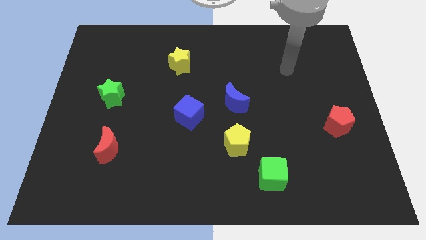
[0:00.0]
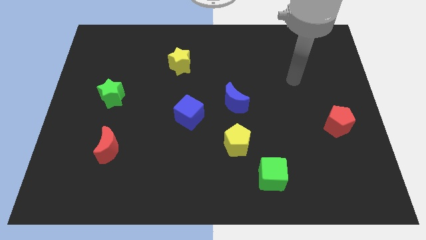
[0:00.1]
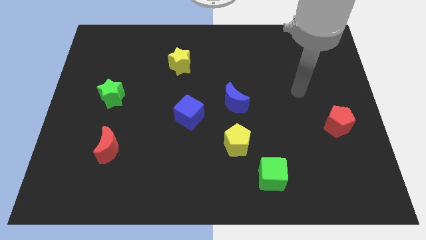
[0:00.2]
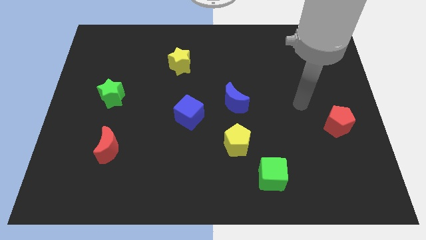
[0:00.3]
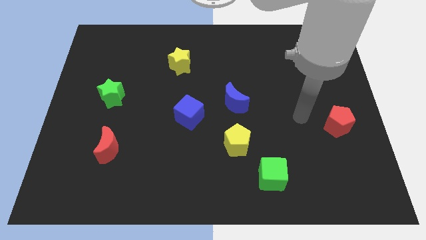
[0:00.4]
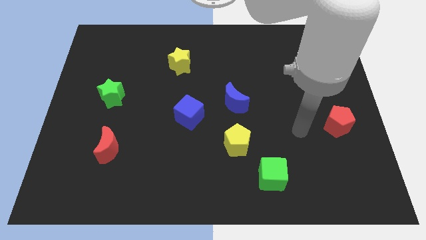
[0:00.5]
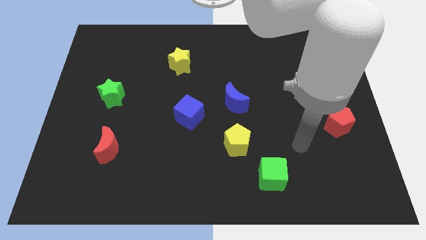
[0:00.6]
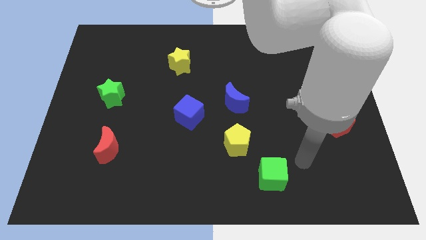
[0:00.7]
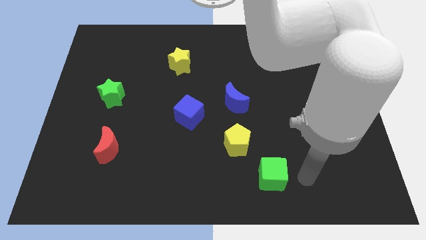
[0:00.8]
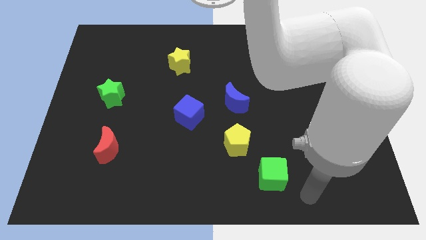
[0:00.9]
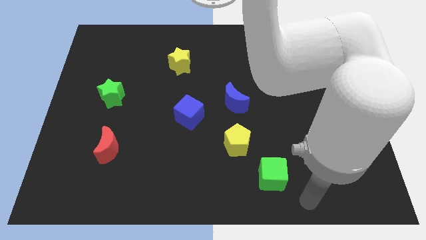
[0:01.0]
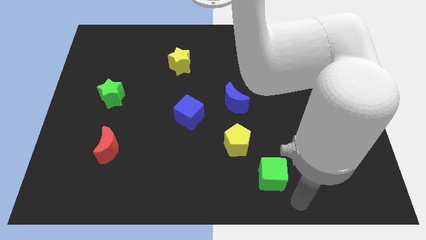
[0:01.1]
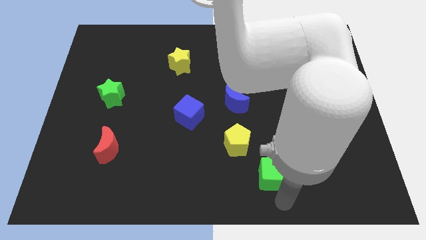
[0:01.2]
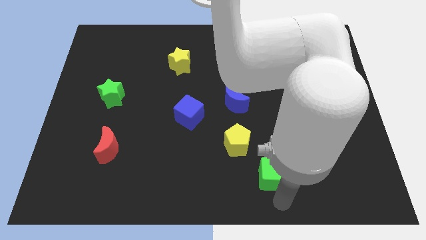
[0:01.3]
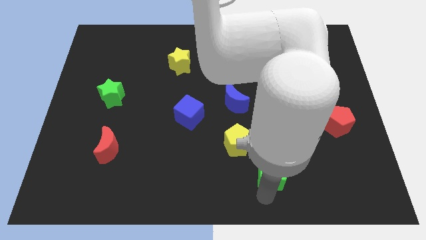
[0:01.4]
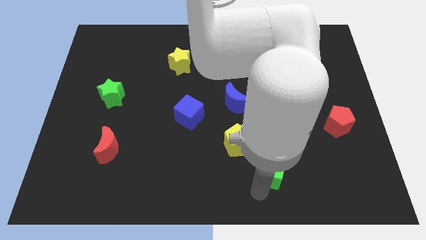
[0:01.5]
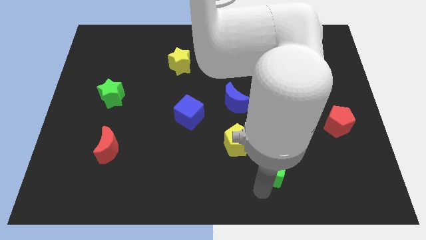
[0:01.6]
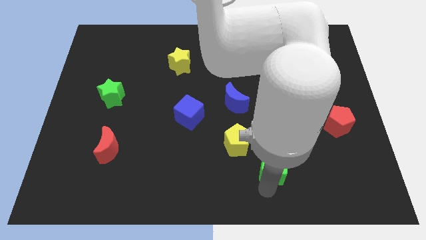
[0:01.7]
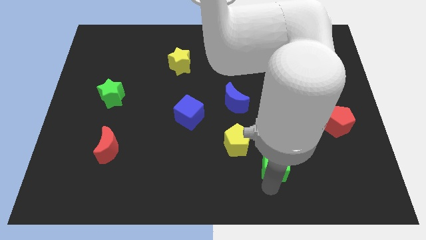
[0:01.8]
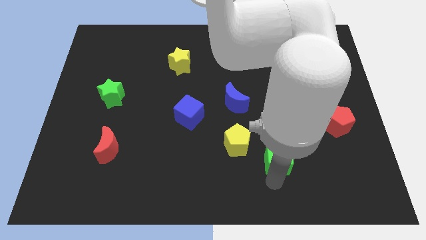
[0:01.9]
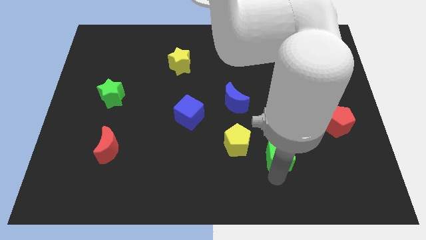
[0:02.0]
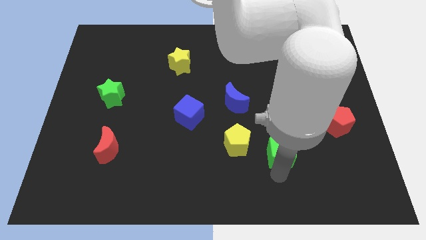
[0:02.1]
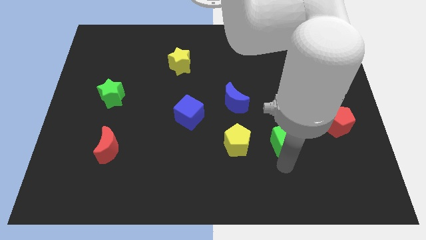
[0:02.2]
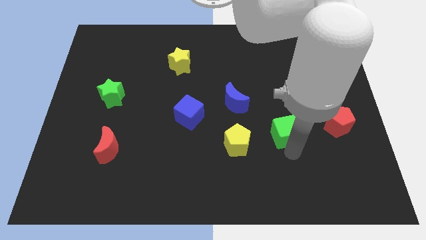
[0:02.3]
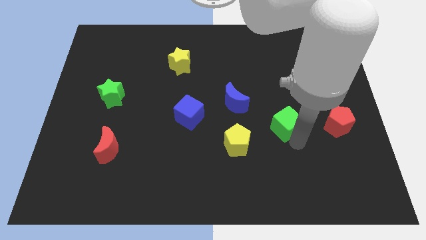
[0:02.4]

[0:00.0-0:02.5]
place the green cube right to the yellow pentagon

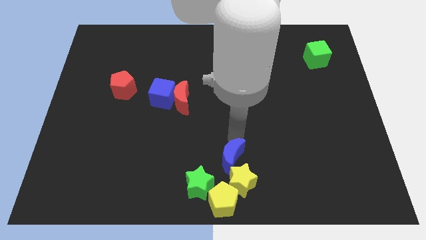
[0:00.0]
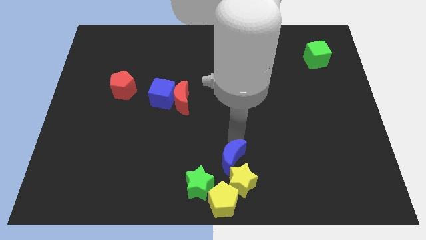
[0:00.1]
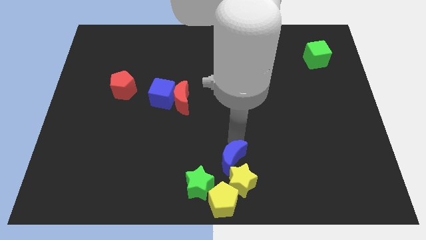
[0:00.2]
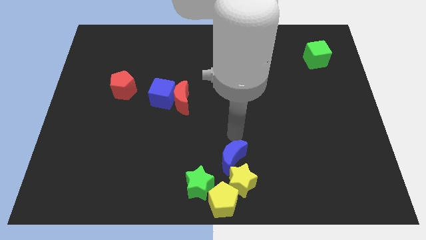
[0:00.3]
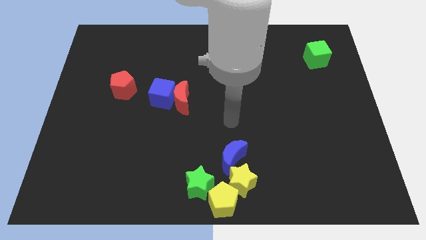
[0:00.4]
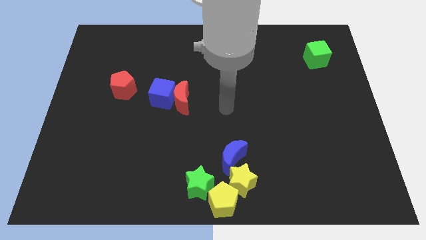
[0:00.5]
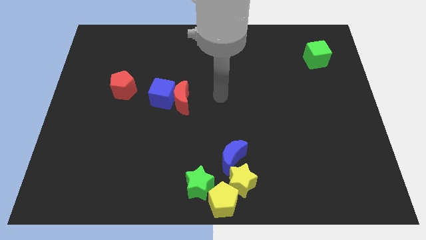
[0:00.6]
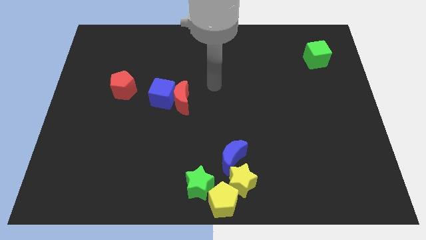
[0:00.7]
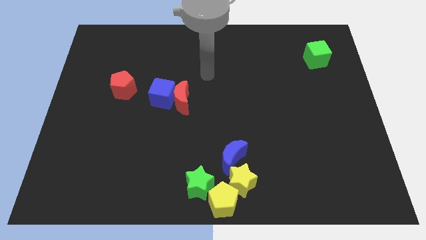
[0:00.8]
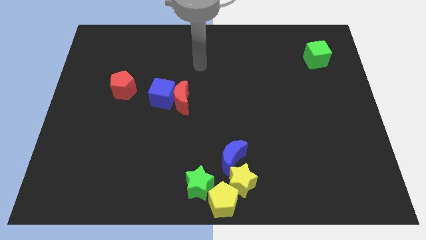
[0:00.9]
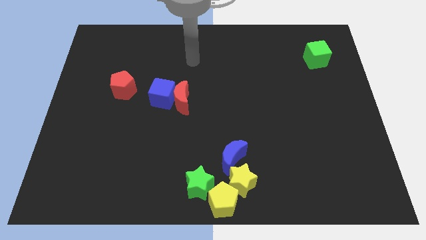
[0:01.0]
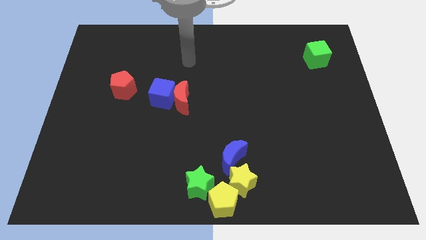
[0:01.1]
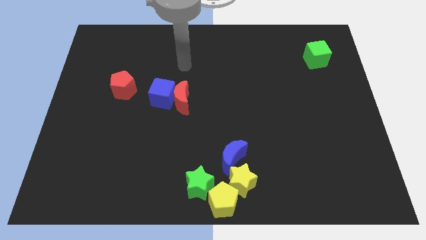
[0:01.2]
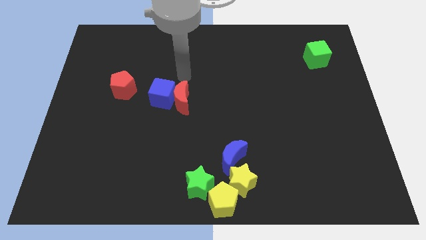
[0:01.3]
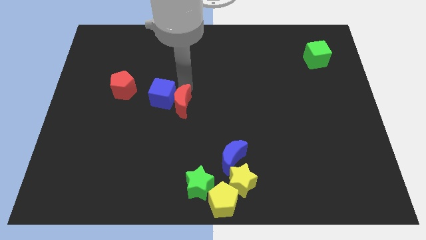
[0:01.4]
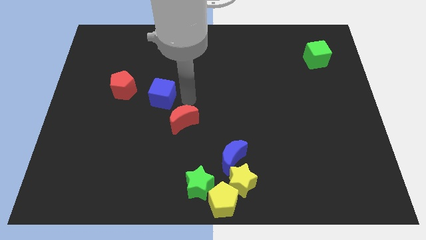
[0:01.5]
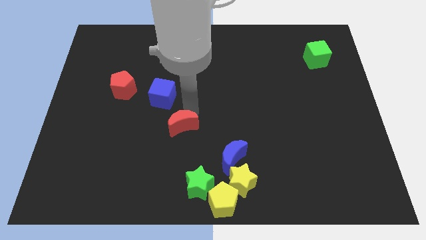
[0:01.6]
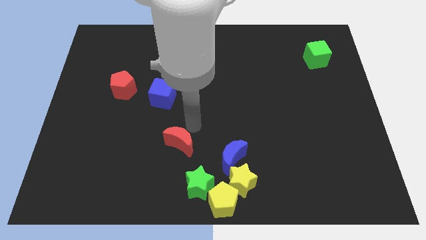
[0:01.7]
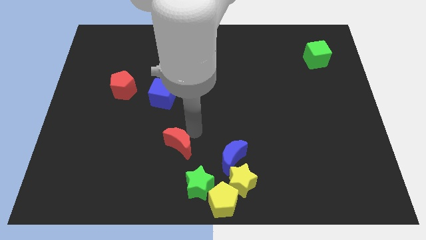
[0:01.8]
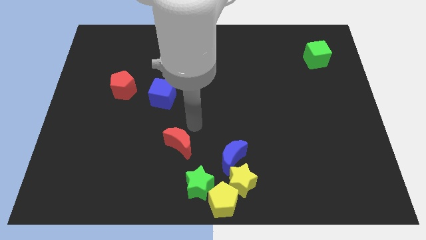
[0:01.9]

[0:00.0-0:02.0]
separate red moon from blue cube

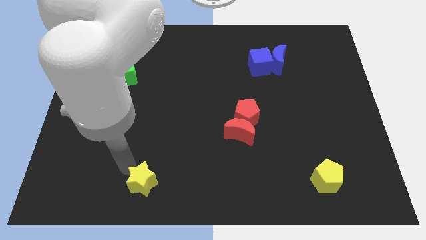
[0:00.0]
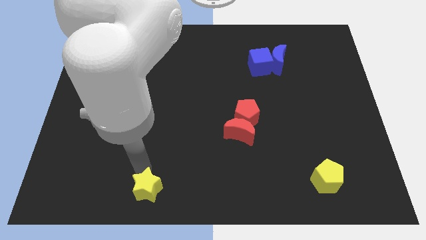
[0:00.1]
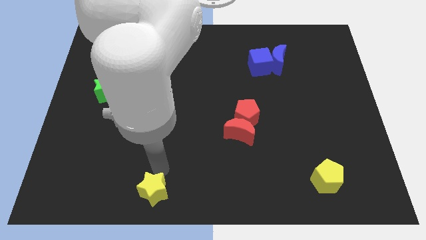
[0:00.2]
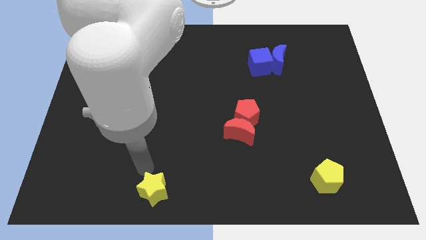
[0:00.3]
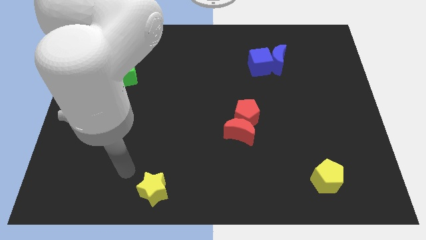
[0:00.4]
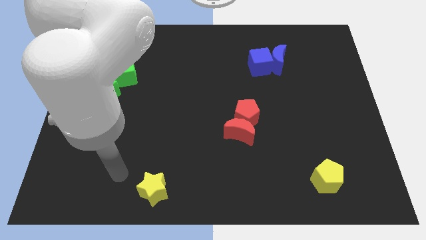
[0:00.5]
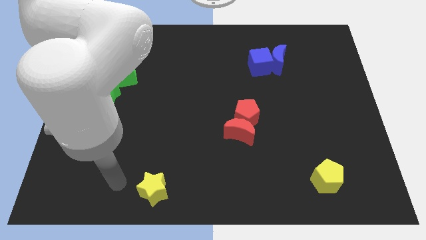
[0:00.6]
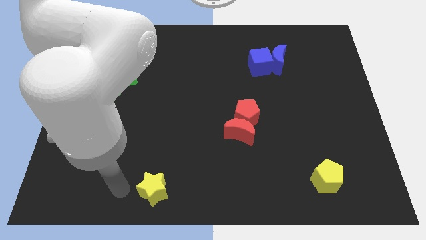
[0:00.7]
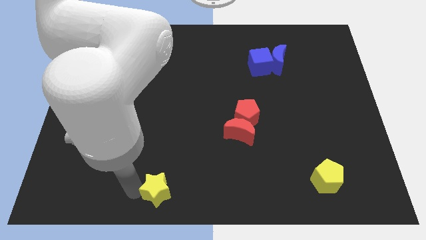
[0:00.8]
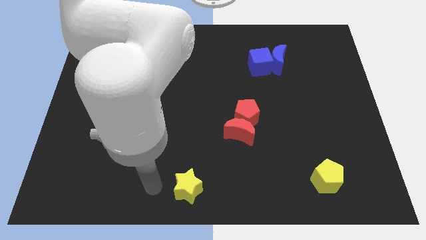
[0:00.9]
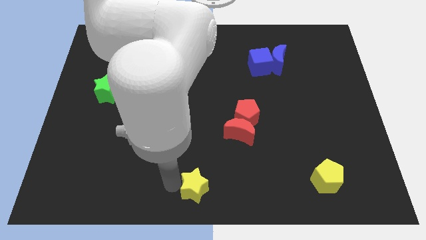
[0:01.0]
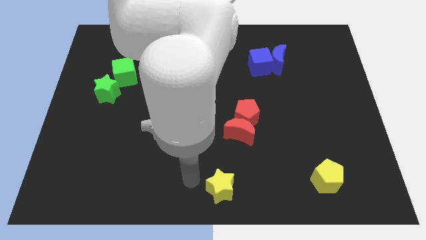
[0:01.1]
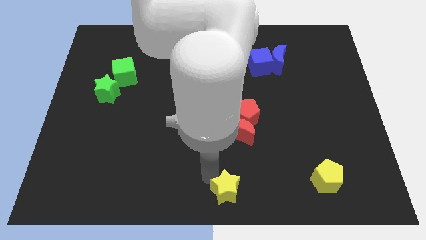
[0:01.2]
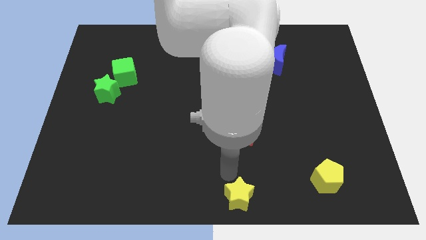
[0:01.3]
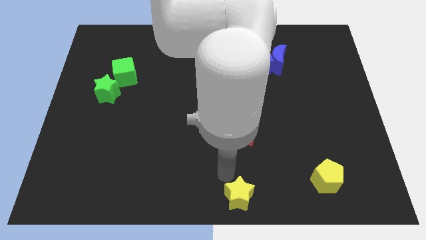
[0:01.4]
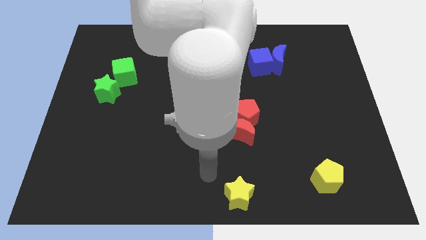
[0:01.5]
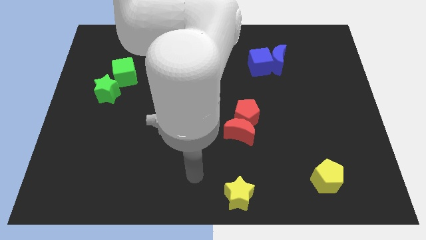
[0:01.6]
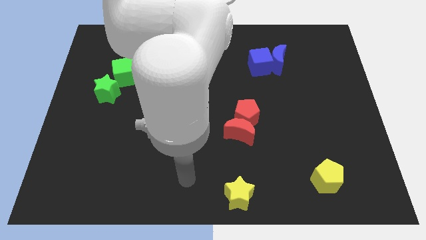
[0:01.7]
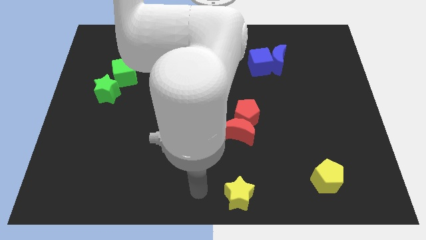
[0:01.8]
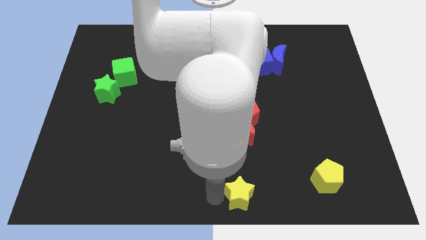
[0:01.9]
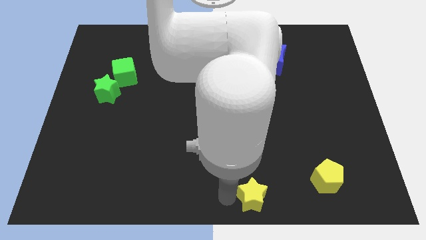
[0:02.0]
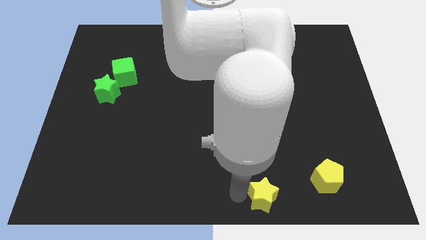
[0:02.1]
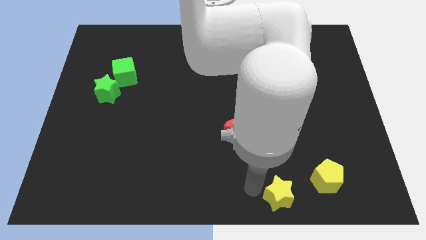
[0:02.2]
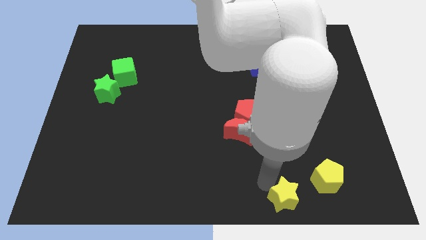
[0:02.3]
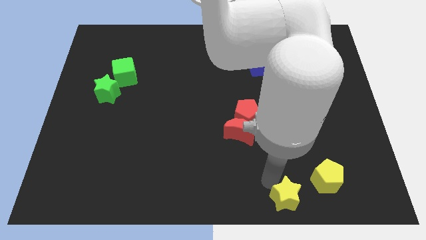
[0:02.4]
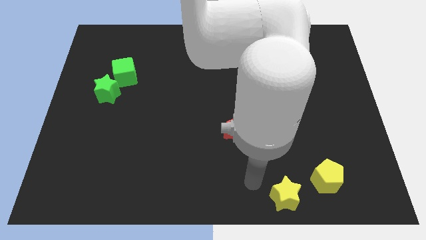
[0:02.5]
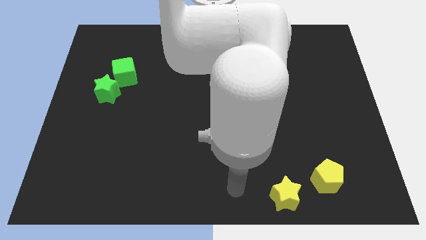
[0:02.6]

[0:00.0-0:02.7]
move the yellow star to the left of the yellow pentagon

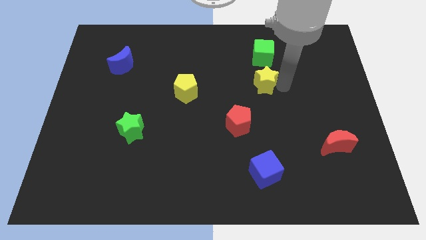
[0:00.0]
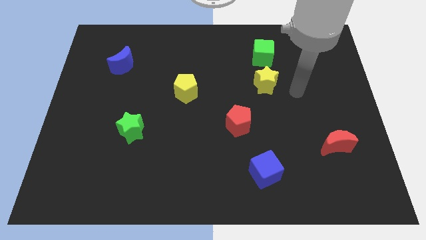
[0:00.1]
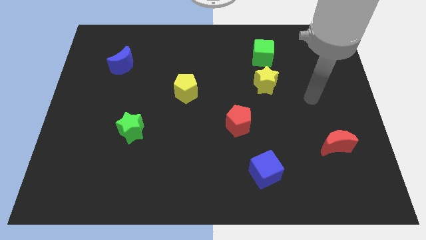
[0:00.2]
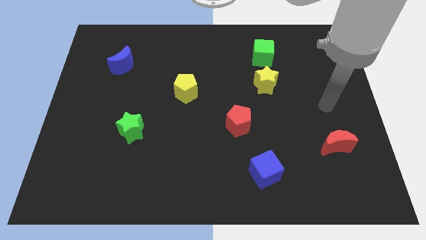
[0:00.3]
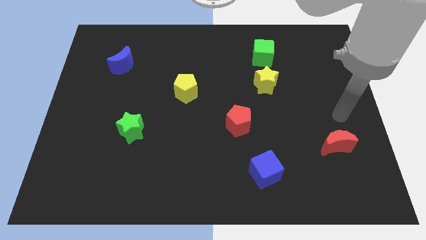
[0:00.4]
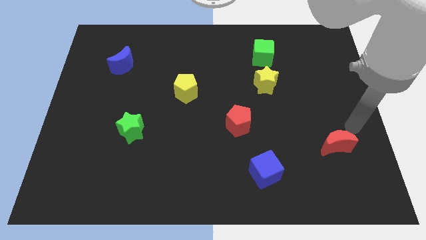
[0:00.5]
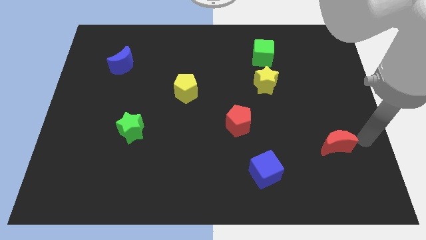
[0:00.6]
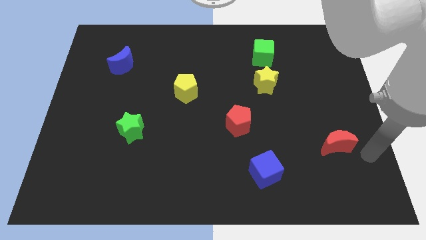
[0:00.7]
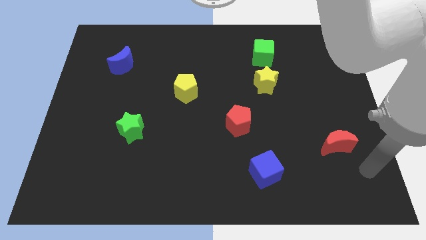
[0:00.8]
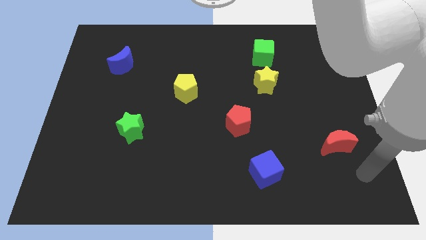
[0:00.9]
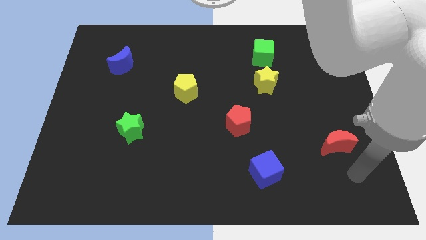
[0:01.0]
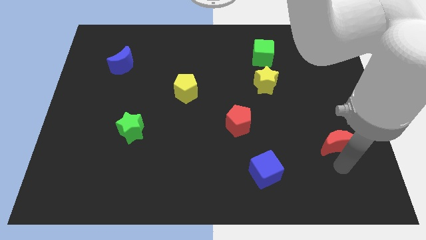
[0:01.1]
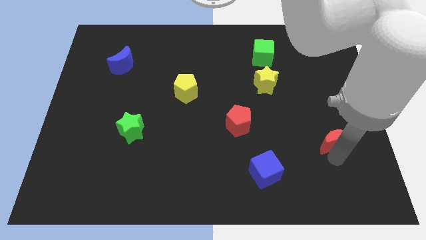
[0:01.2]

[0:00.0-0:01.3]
move your arm away from the yellow star

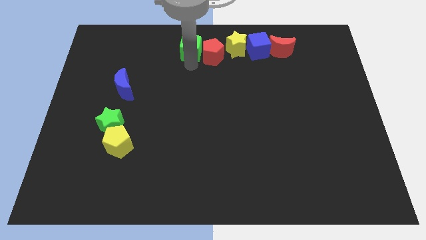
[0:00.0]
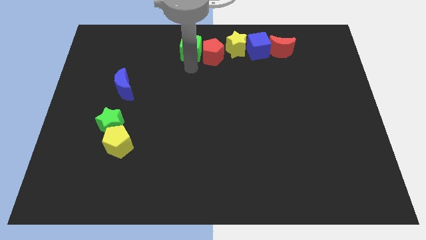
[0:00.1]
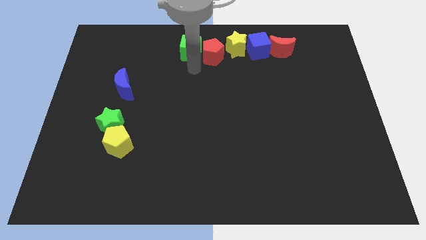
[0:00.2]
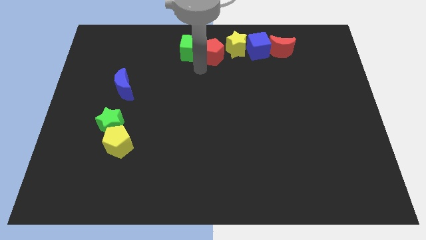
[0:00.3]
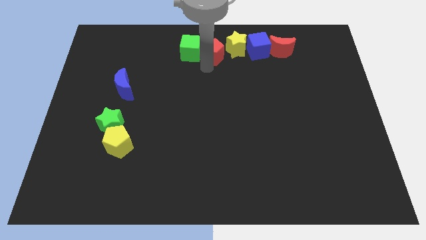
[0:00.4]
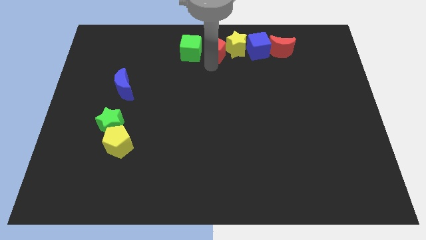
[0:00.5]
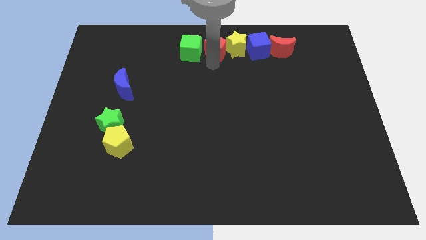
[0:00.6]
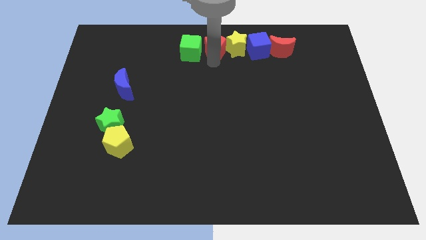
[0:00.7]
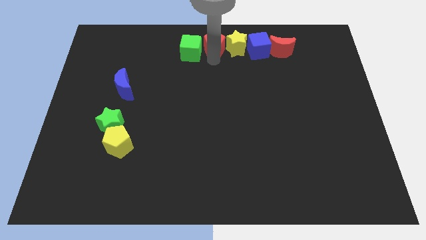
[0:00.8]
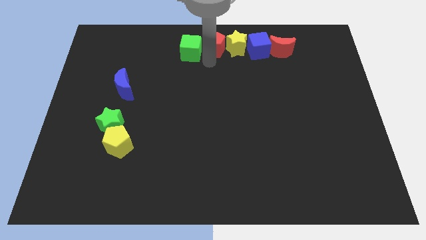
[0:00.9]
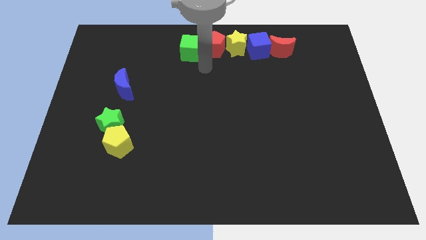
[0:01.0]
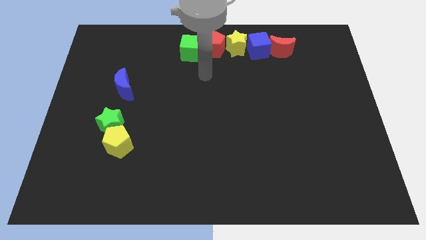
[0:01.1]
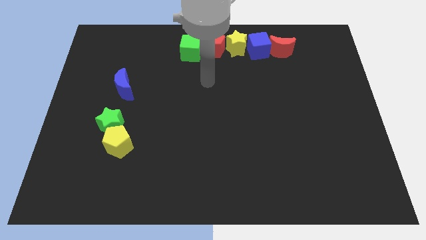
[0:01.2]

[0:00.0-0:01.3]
move red pentagon to the top center of the board
